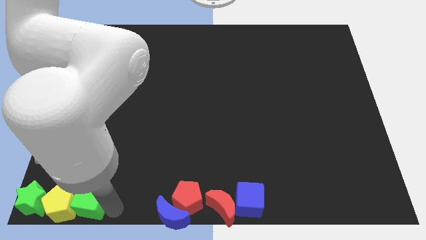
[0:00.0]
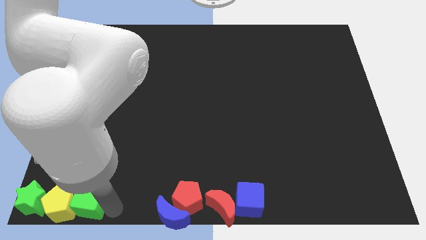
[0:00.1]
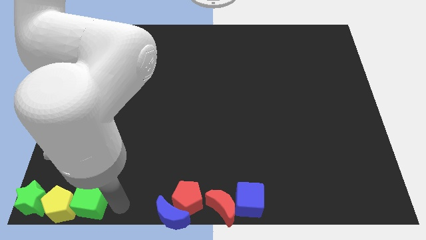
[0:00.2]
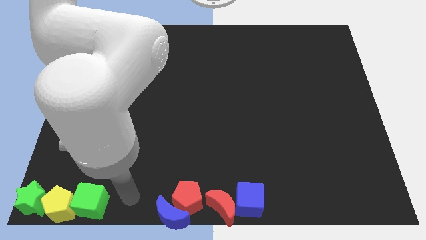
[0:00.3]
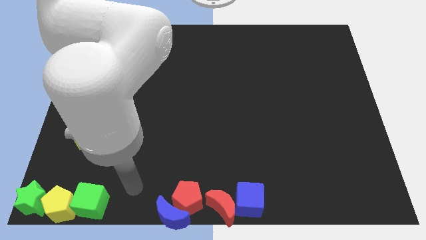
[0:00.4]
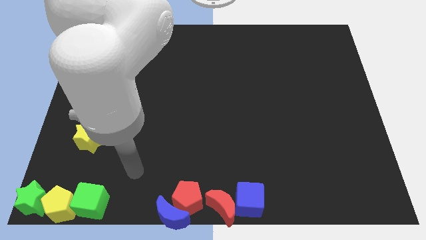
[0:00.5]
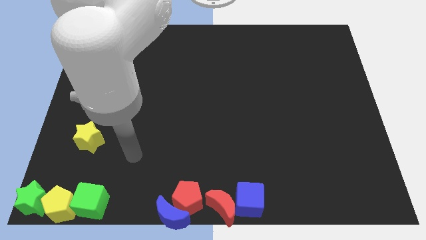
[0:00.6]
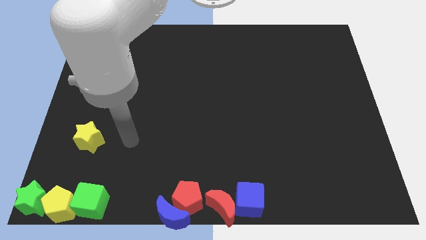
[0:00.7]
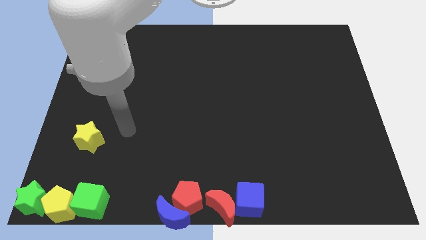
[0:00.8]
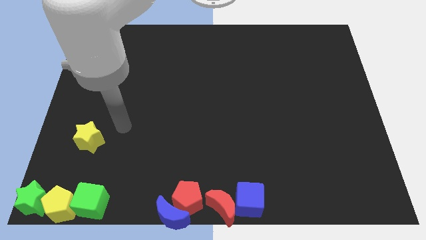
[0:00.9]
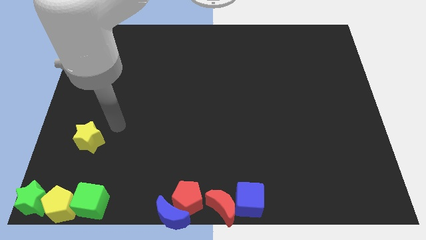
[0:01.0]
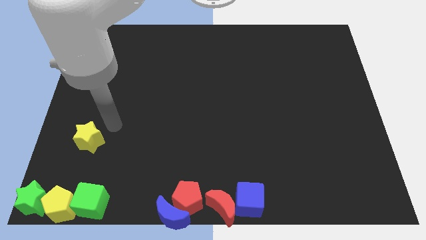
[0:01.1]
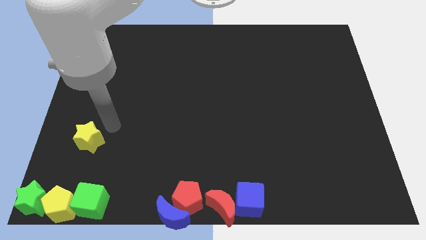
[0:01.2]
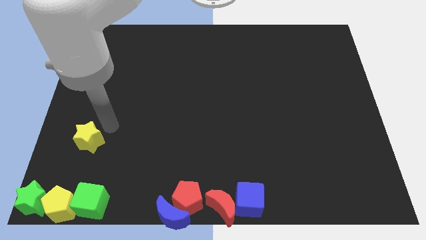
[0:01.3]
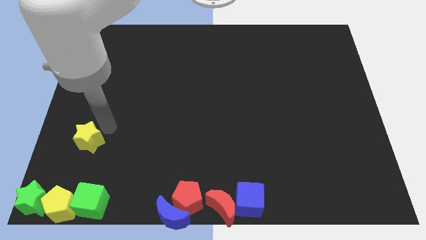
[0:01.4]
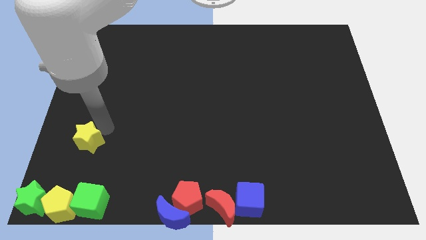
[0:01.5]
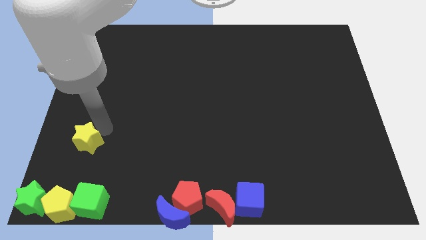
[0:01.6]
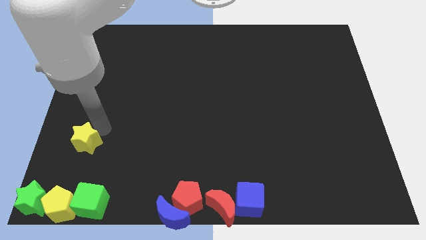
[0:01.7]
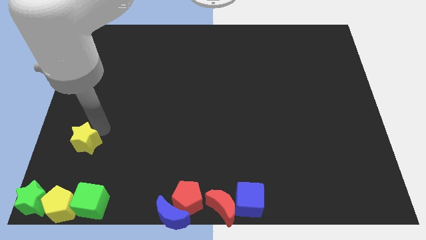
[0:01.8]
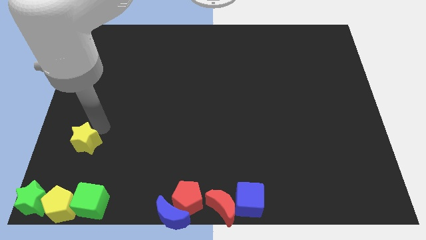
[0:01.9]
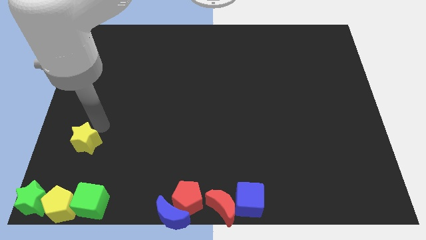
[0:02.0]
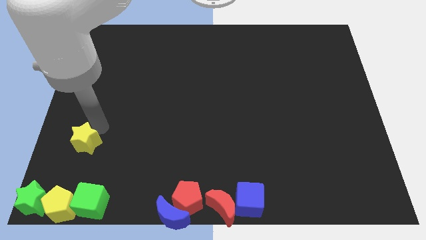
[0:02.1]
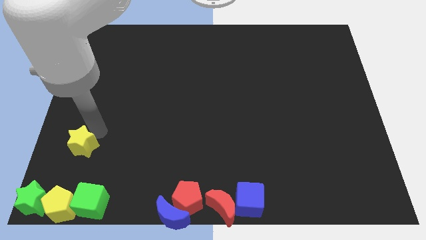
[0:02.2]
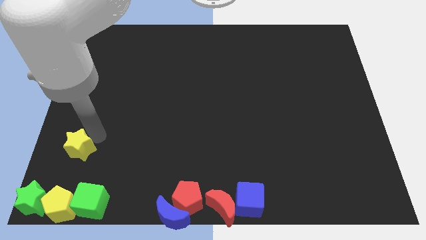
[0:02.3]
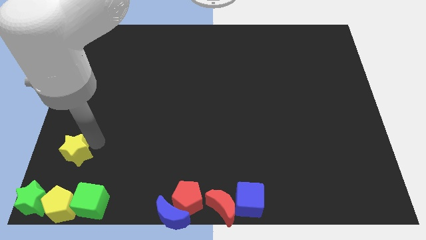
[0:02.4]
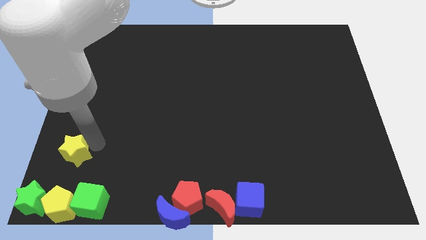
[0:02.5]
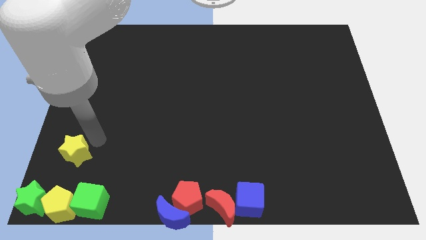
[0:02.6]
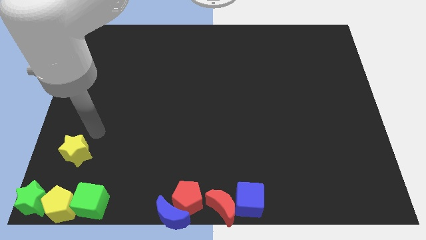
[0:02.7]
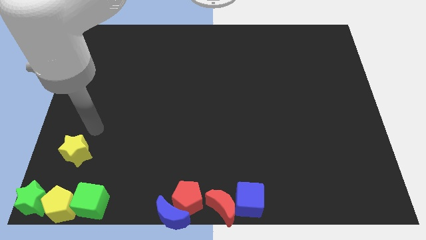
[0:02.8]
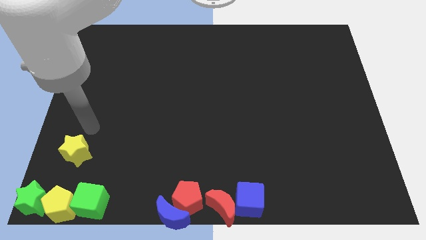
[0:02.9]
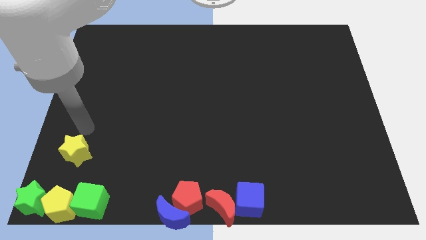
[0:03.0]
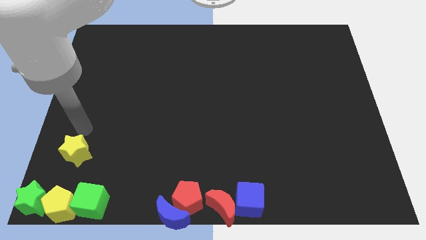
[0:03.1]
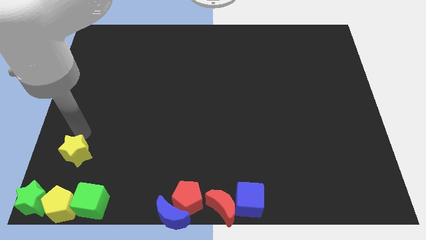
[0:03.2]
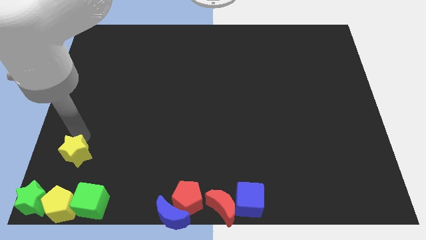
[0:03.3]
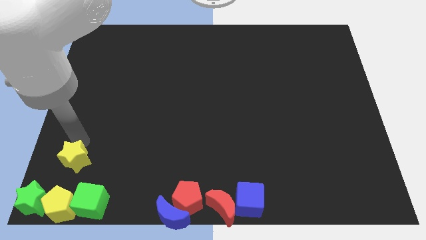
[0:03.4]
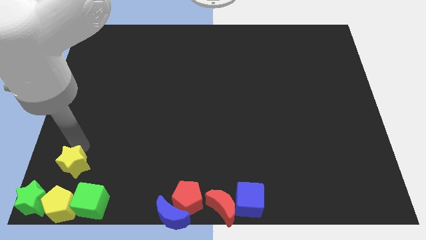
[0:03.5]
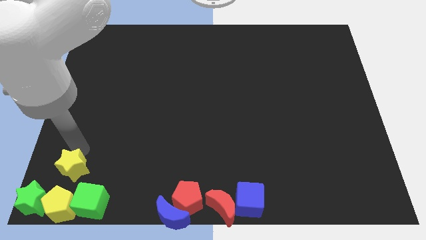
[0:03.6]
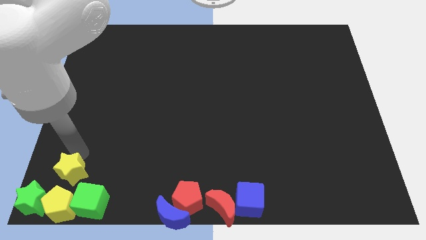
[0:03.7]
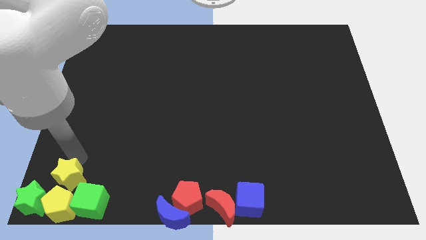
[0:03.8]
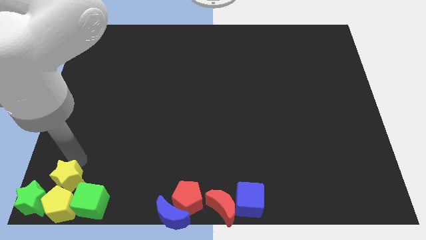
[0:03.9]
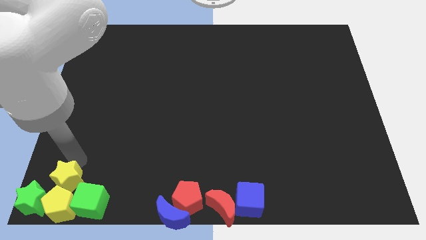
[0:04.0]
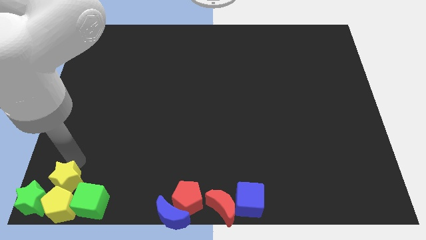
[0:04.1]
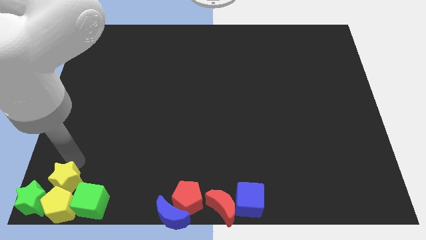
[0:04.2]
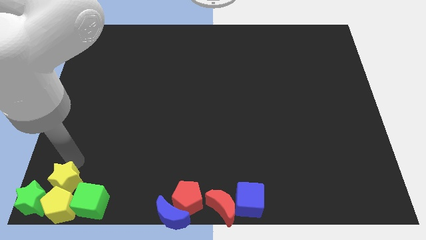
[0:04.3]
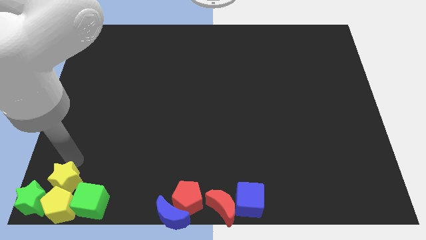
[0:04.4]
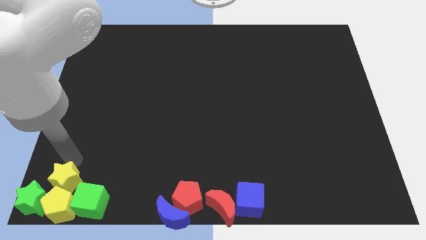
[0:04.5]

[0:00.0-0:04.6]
drag the yellow star into the top side of the yellow pentagon

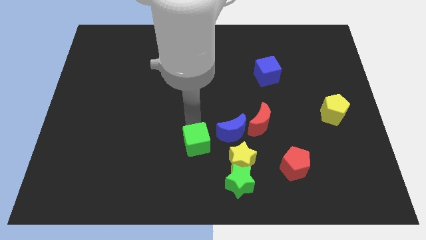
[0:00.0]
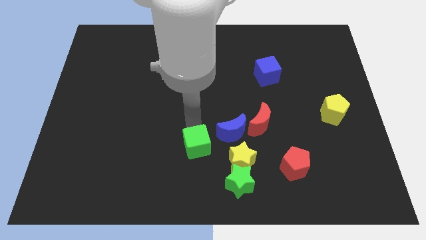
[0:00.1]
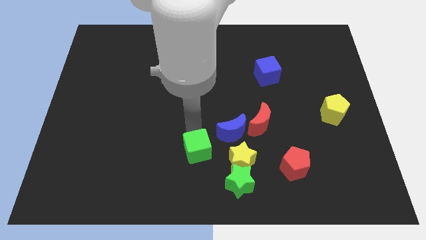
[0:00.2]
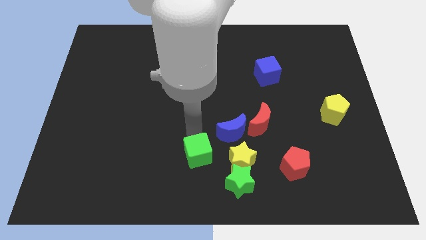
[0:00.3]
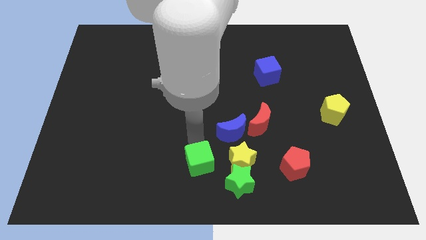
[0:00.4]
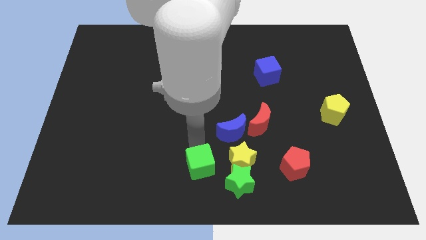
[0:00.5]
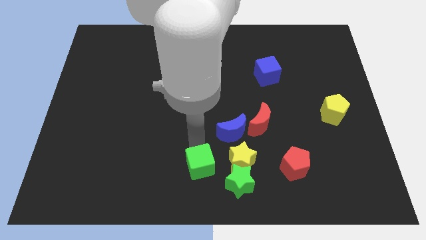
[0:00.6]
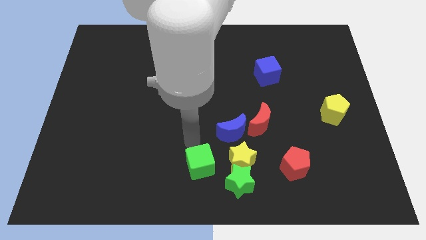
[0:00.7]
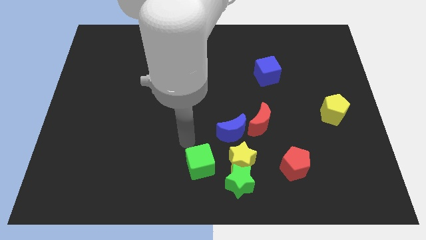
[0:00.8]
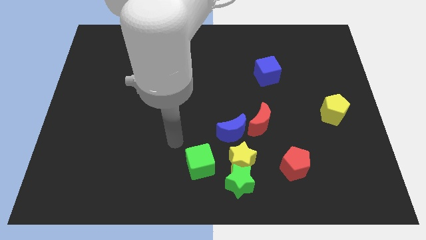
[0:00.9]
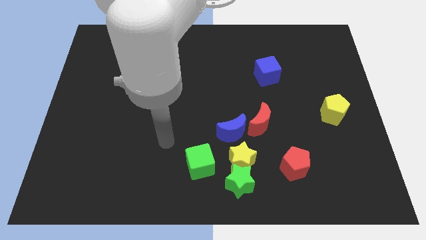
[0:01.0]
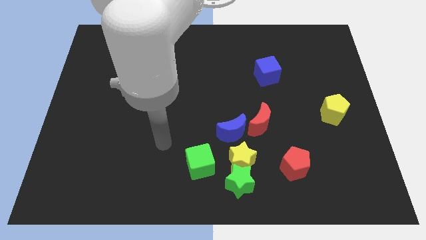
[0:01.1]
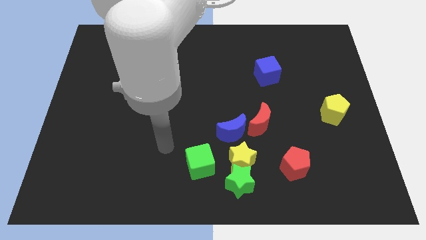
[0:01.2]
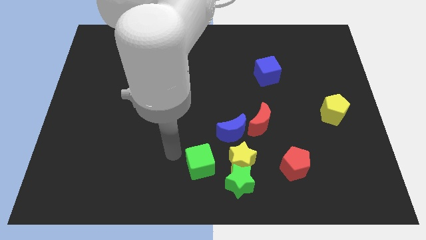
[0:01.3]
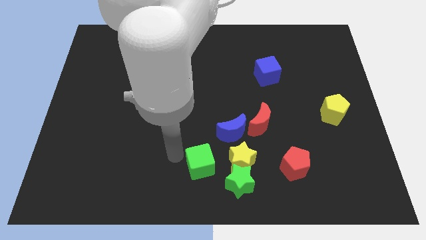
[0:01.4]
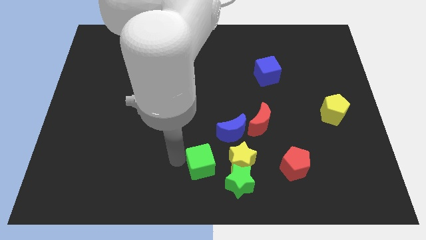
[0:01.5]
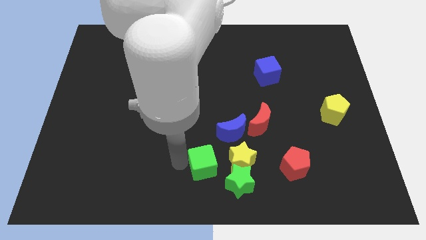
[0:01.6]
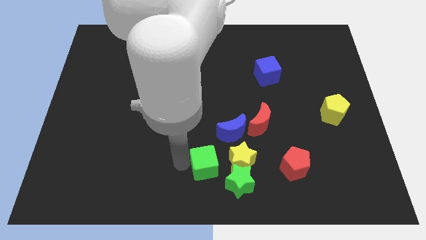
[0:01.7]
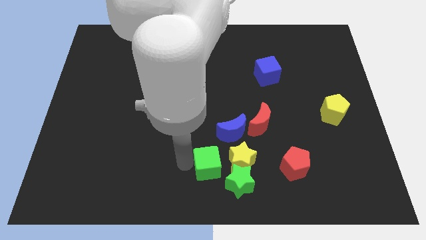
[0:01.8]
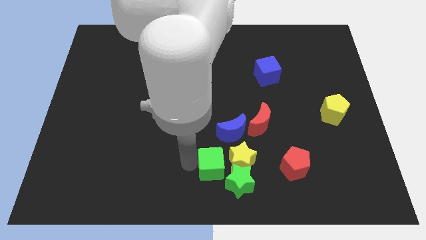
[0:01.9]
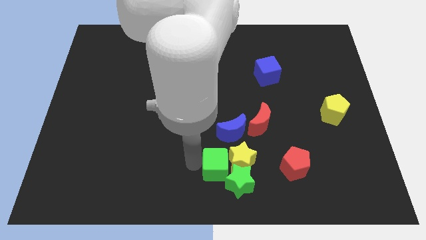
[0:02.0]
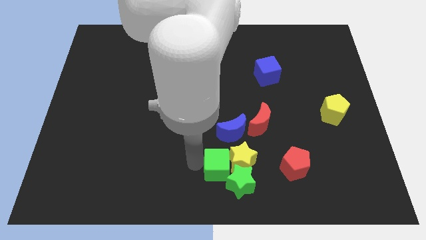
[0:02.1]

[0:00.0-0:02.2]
push the green cube into group of stars

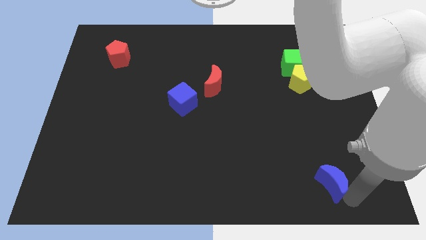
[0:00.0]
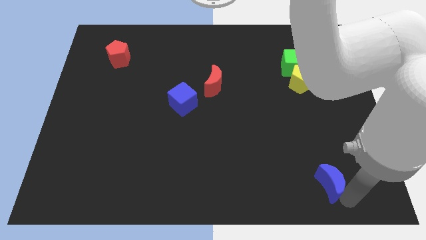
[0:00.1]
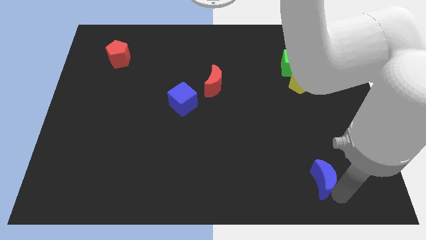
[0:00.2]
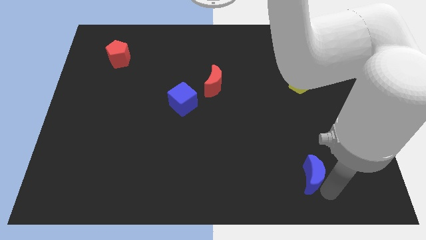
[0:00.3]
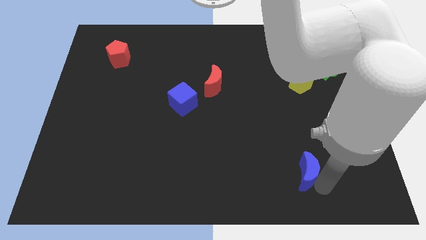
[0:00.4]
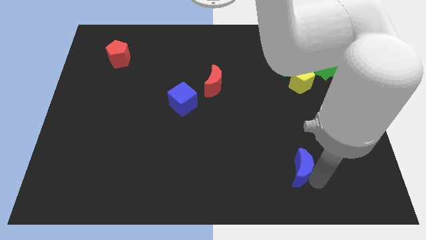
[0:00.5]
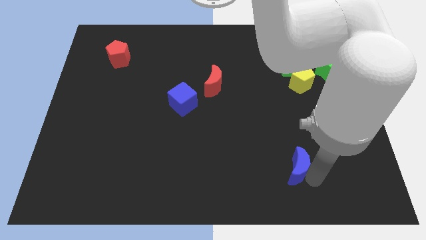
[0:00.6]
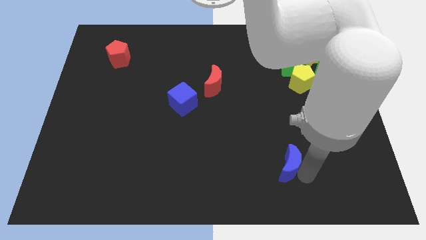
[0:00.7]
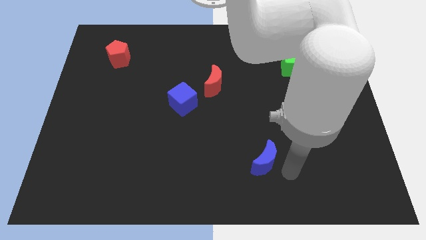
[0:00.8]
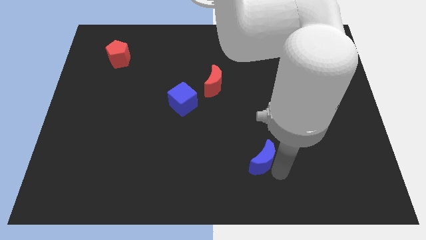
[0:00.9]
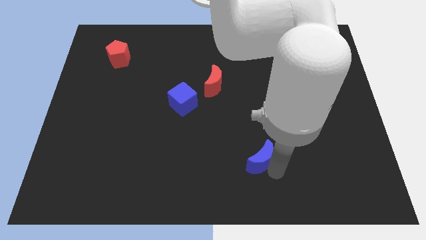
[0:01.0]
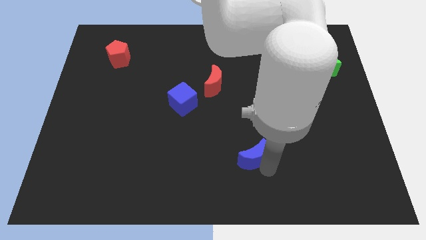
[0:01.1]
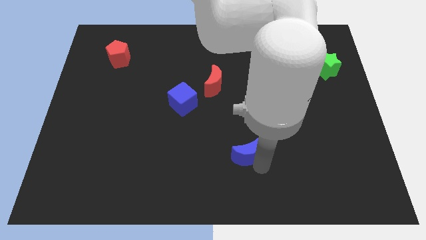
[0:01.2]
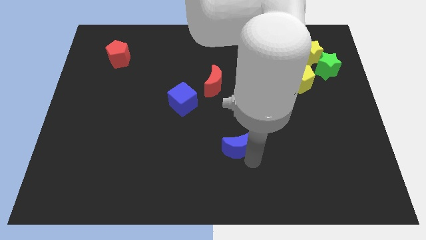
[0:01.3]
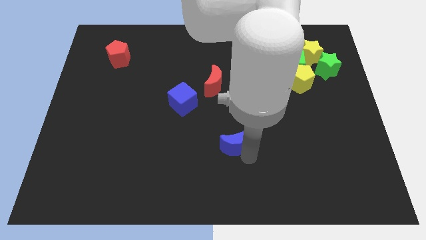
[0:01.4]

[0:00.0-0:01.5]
push the blue crescent towards the blue cube

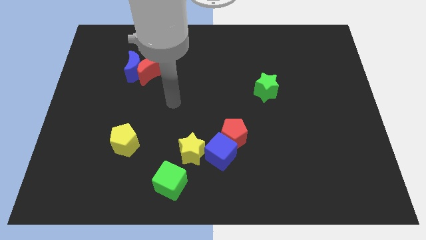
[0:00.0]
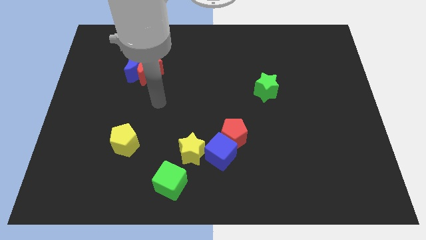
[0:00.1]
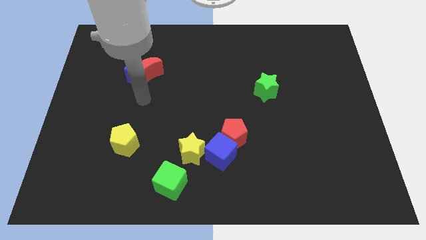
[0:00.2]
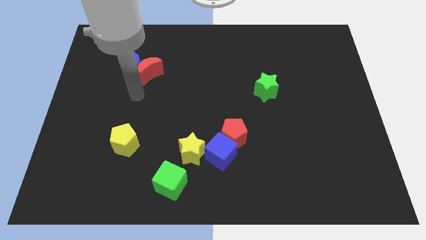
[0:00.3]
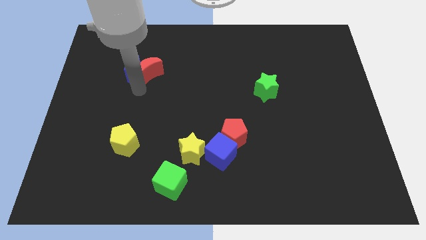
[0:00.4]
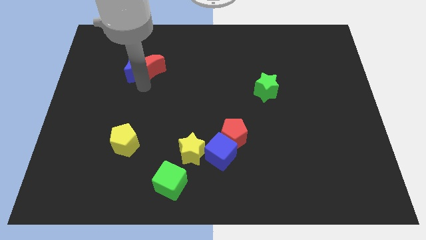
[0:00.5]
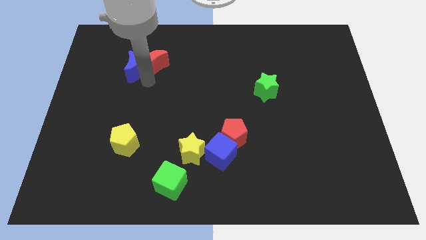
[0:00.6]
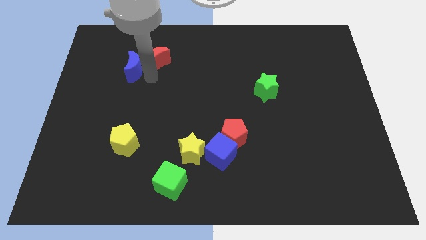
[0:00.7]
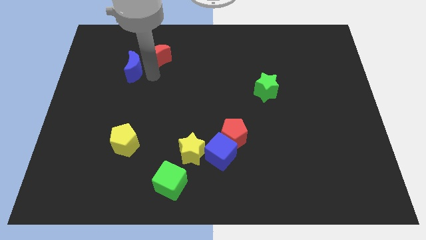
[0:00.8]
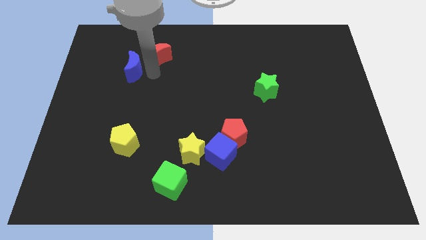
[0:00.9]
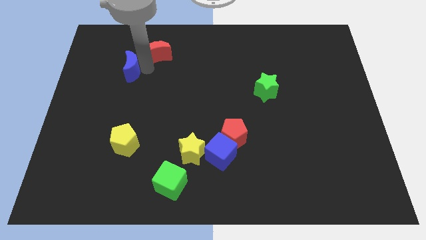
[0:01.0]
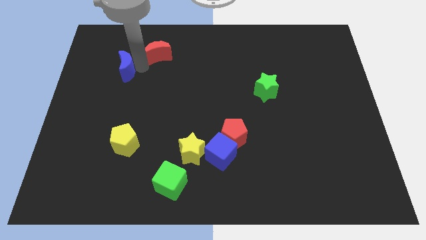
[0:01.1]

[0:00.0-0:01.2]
push the red moon up slightly
